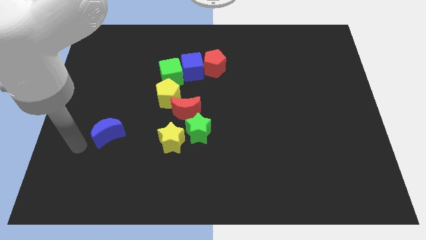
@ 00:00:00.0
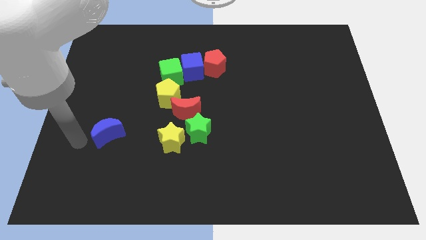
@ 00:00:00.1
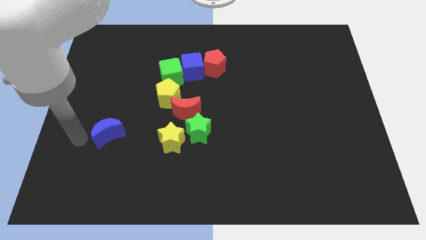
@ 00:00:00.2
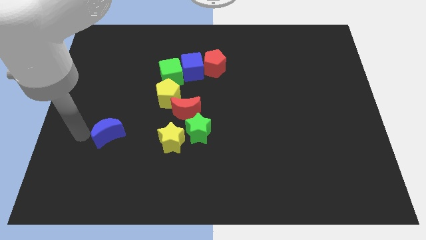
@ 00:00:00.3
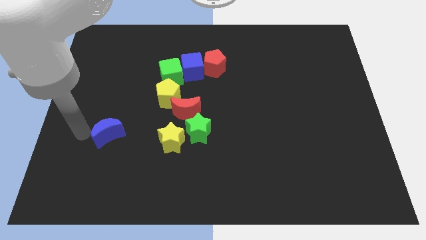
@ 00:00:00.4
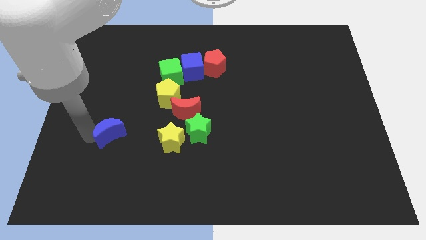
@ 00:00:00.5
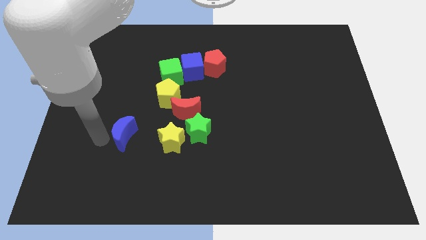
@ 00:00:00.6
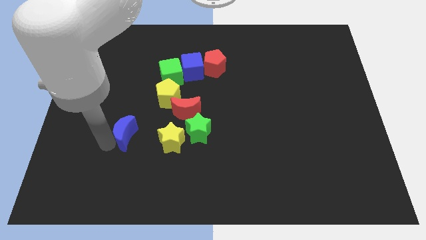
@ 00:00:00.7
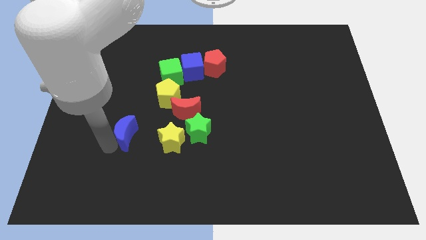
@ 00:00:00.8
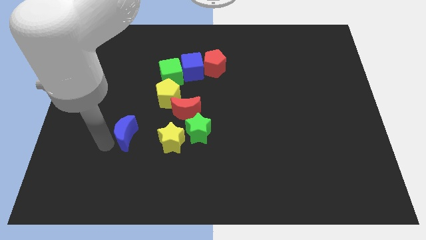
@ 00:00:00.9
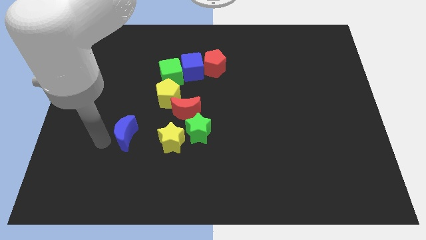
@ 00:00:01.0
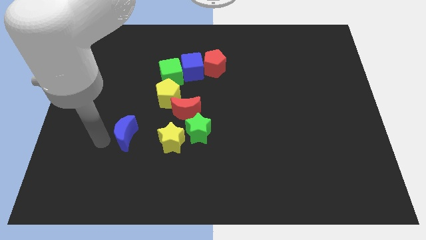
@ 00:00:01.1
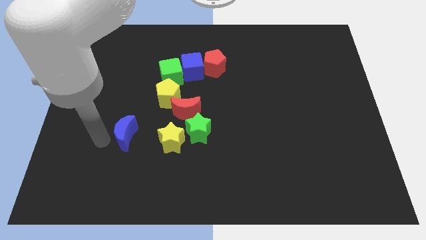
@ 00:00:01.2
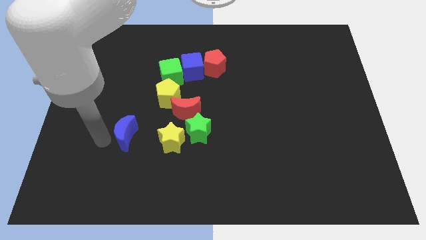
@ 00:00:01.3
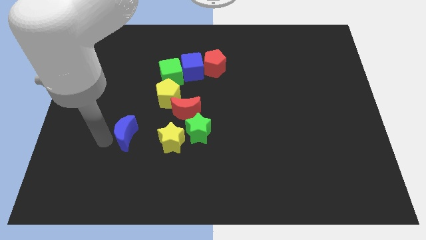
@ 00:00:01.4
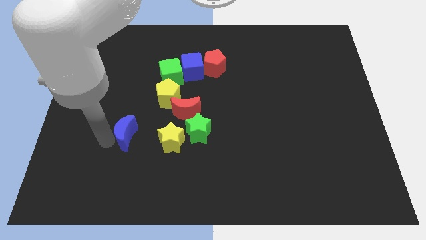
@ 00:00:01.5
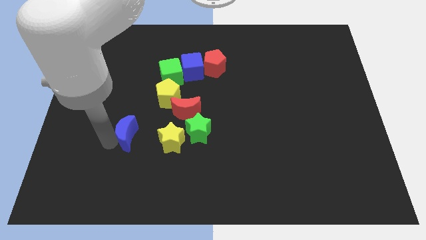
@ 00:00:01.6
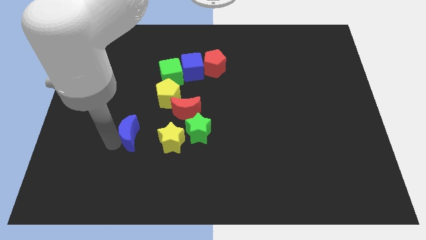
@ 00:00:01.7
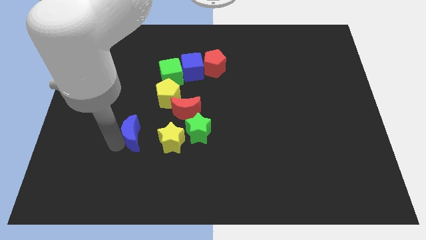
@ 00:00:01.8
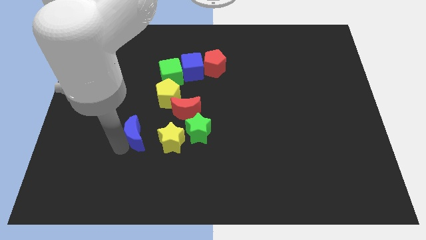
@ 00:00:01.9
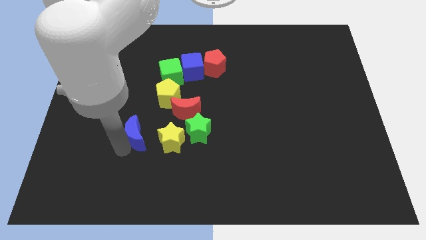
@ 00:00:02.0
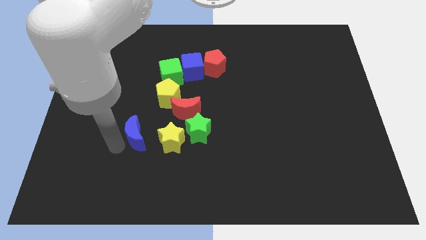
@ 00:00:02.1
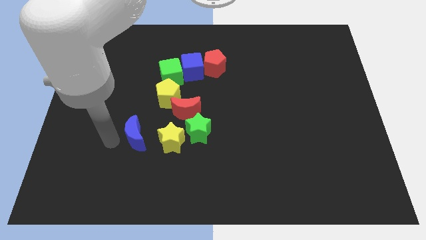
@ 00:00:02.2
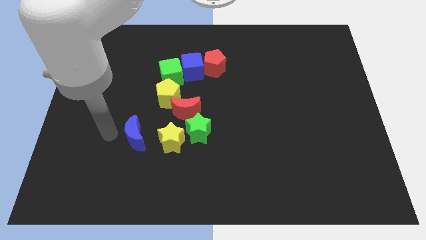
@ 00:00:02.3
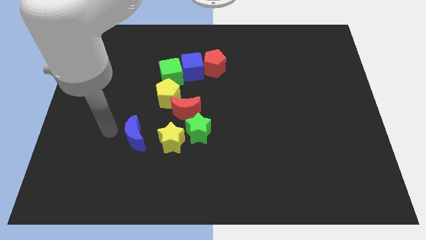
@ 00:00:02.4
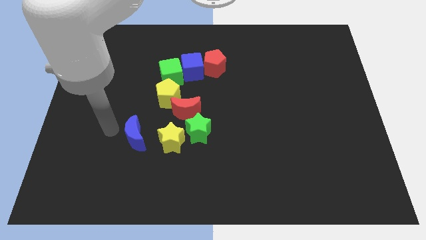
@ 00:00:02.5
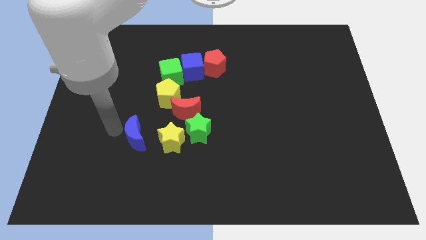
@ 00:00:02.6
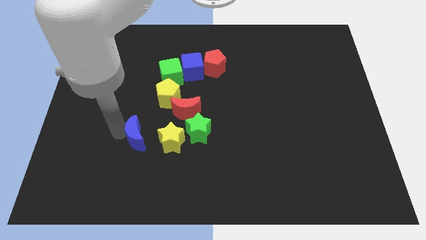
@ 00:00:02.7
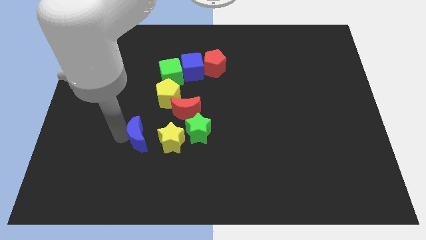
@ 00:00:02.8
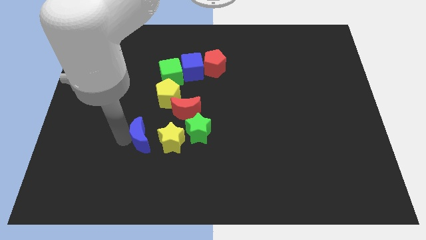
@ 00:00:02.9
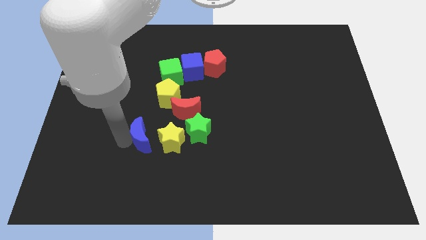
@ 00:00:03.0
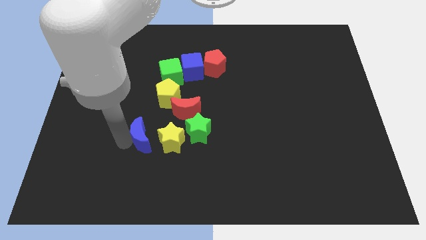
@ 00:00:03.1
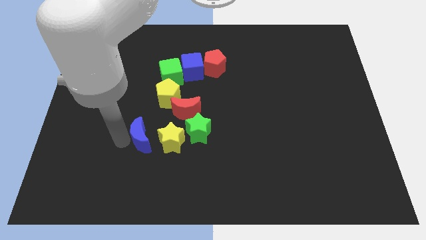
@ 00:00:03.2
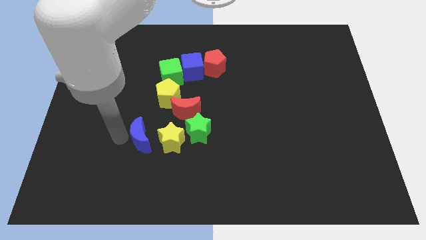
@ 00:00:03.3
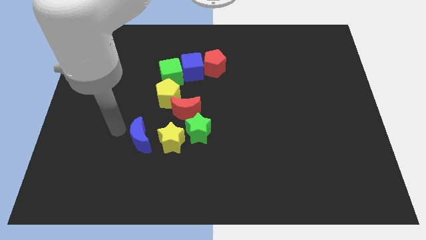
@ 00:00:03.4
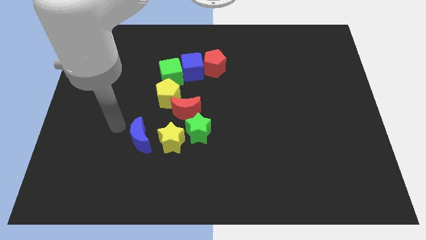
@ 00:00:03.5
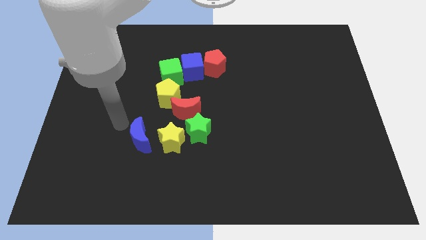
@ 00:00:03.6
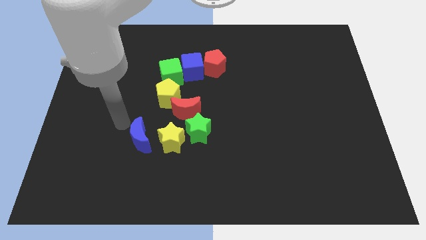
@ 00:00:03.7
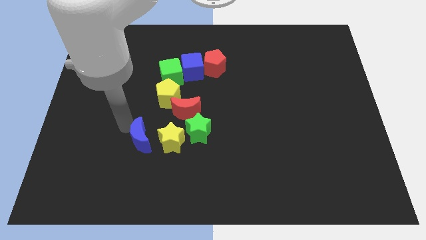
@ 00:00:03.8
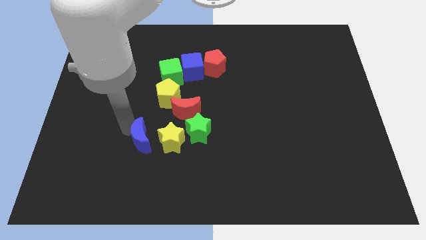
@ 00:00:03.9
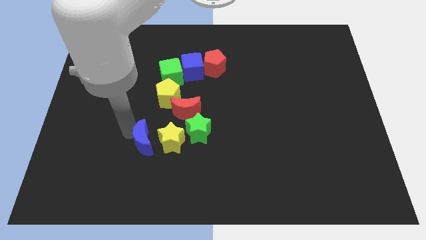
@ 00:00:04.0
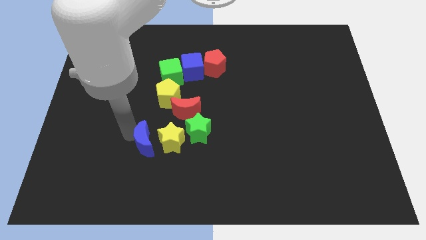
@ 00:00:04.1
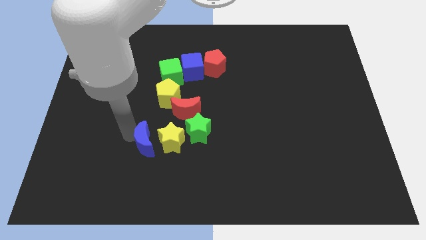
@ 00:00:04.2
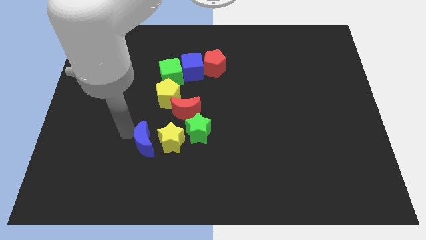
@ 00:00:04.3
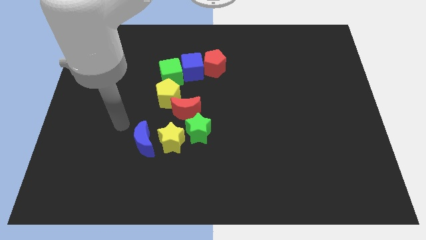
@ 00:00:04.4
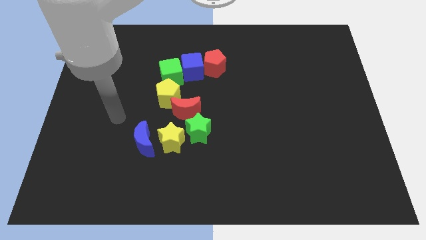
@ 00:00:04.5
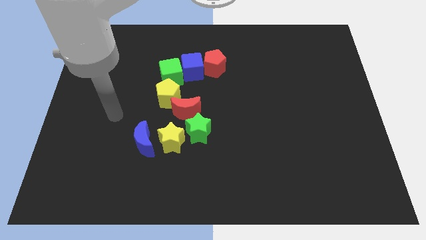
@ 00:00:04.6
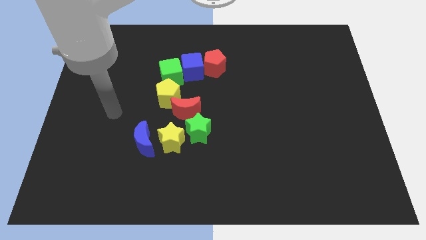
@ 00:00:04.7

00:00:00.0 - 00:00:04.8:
drag the blue crescent to the left side of the yellow star

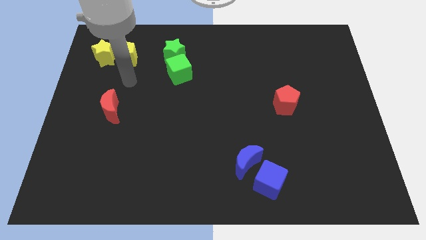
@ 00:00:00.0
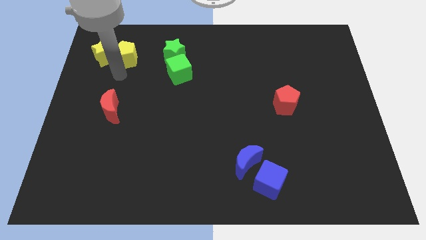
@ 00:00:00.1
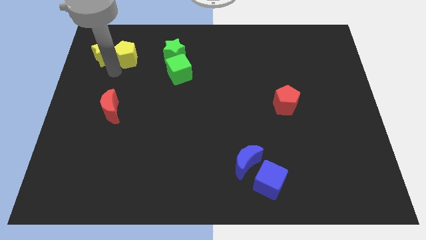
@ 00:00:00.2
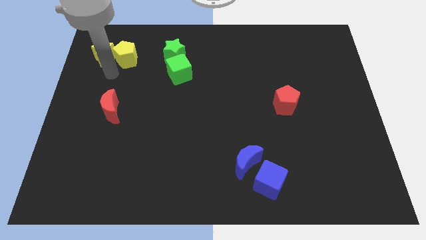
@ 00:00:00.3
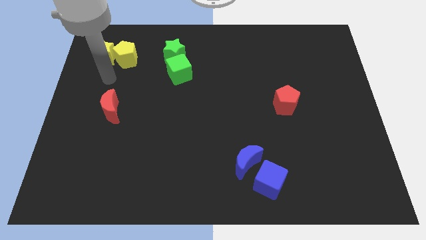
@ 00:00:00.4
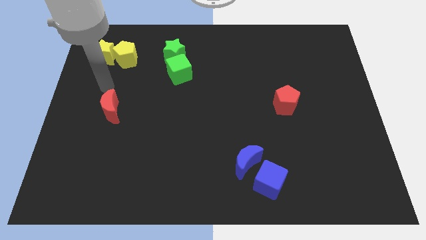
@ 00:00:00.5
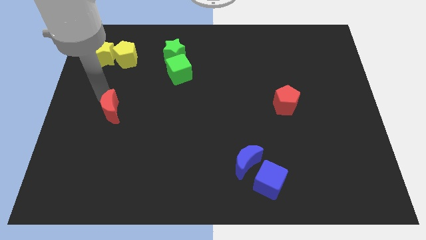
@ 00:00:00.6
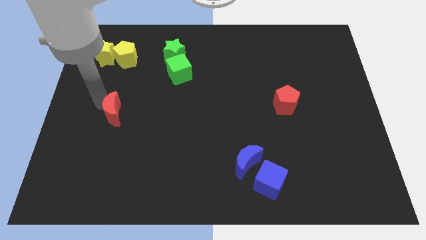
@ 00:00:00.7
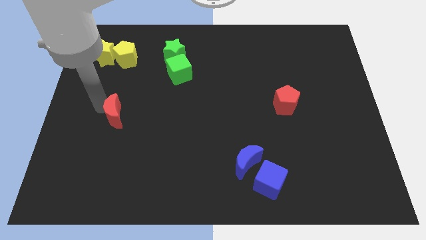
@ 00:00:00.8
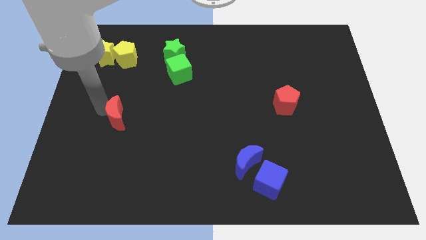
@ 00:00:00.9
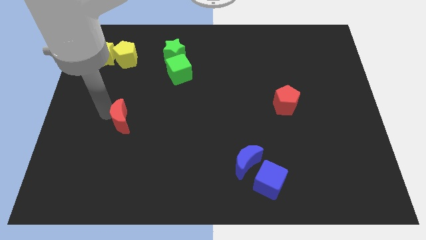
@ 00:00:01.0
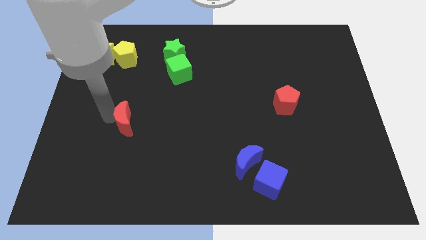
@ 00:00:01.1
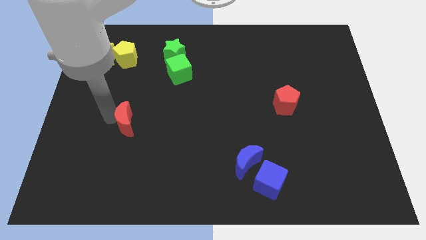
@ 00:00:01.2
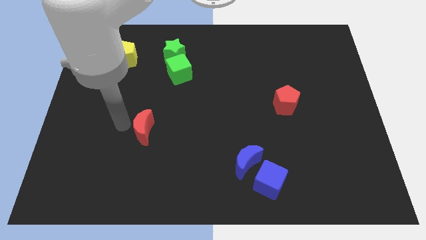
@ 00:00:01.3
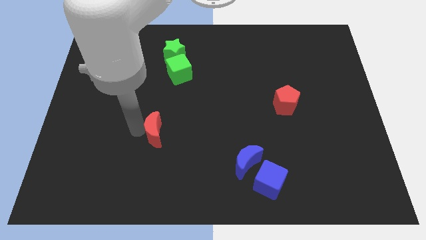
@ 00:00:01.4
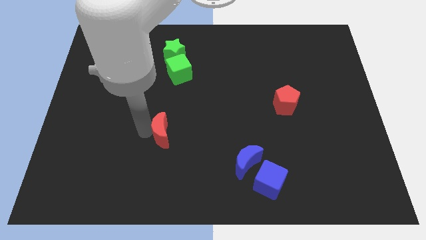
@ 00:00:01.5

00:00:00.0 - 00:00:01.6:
slide the red crescent towards the blue crescent

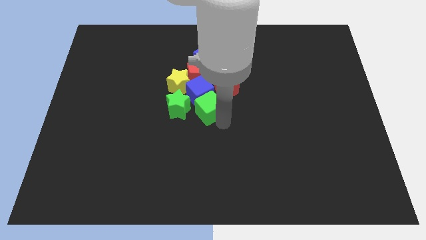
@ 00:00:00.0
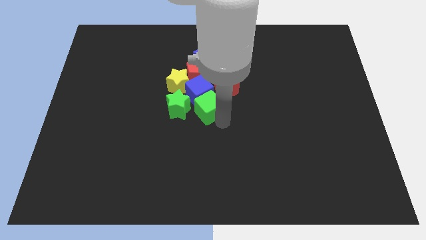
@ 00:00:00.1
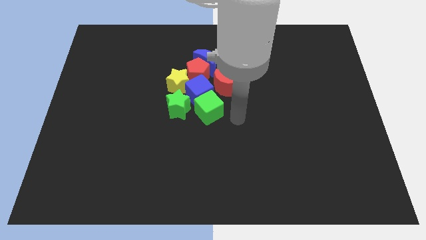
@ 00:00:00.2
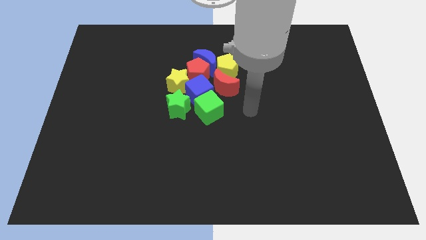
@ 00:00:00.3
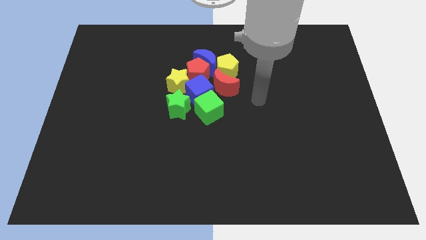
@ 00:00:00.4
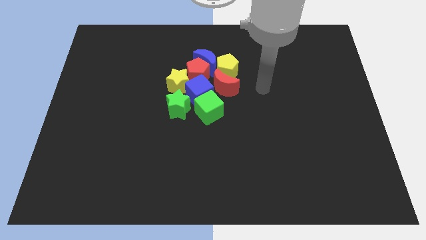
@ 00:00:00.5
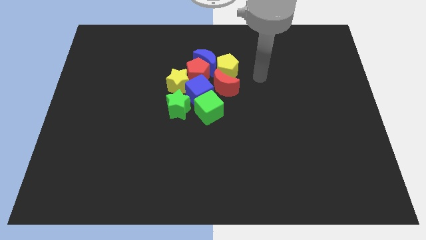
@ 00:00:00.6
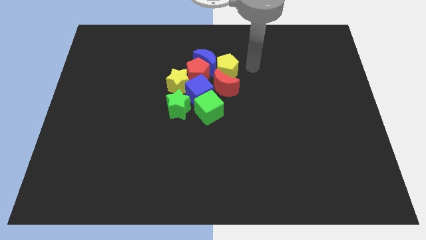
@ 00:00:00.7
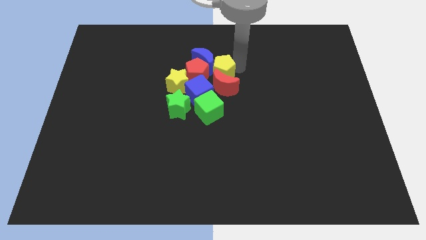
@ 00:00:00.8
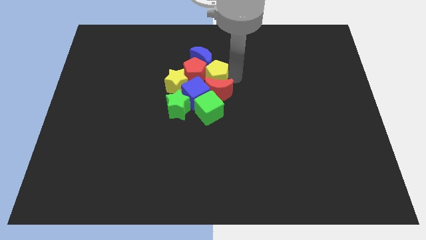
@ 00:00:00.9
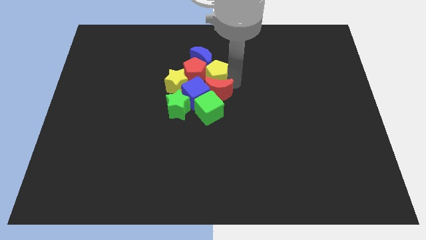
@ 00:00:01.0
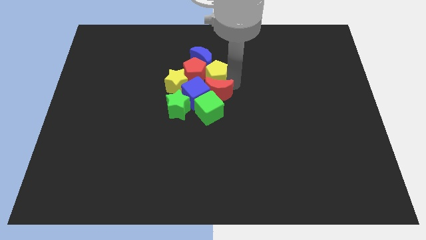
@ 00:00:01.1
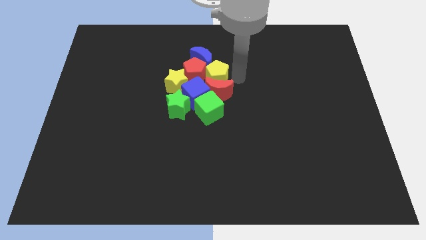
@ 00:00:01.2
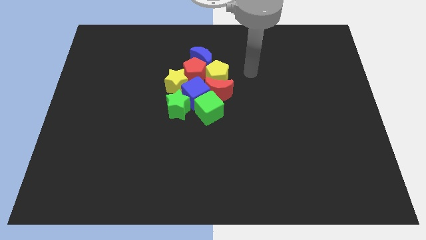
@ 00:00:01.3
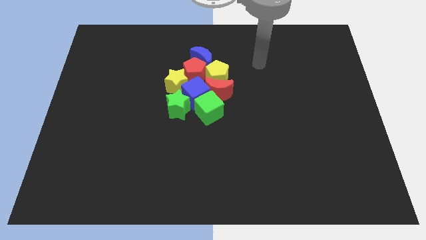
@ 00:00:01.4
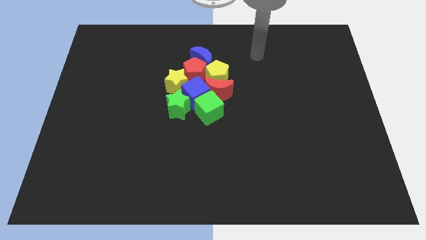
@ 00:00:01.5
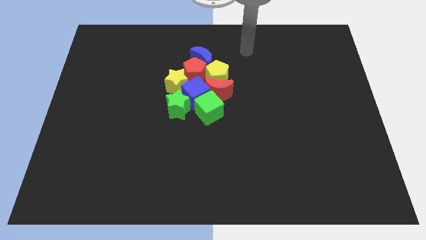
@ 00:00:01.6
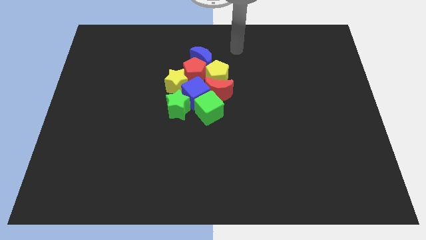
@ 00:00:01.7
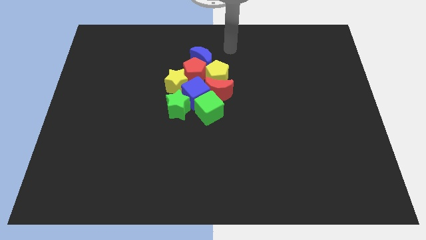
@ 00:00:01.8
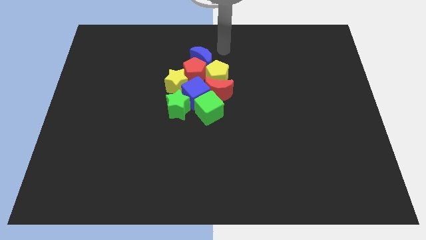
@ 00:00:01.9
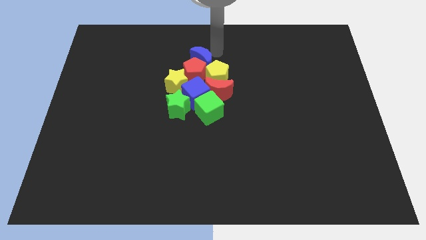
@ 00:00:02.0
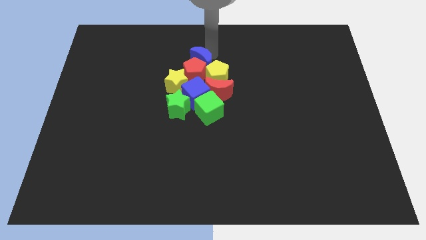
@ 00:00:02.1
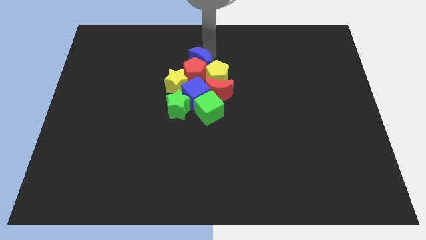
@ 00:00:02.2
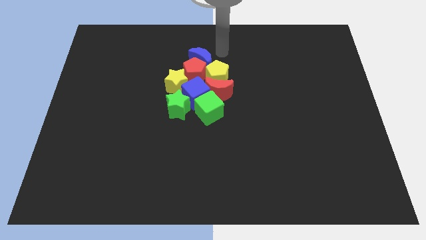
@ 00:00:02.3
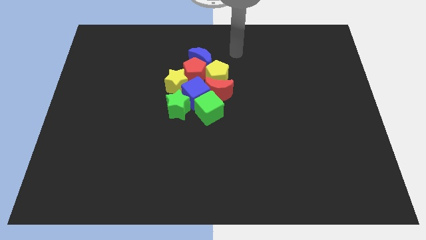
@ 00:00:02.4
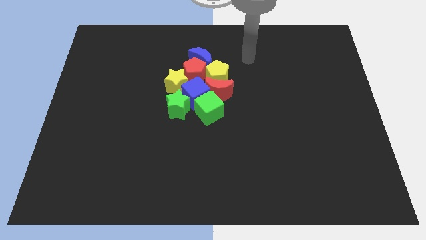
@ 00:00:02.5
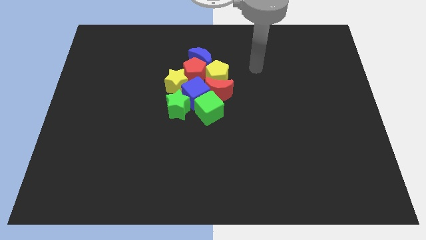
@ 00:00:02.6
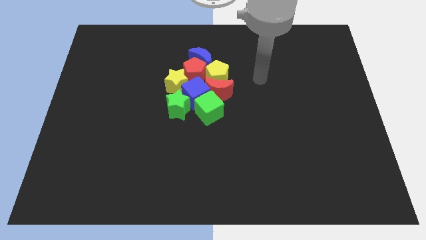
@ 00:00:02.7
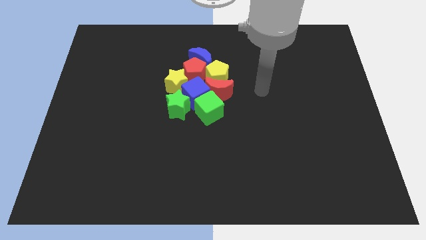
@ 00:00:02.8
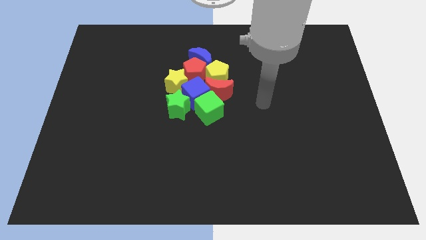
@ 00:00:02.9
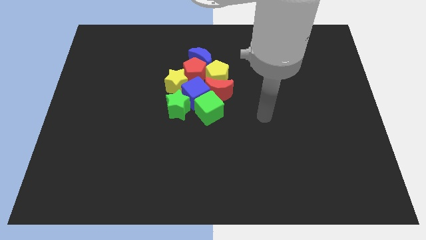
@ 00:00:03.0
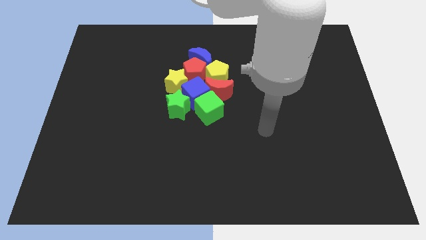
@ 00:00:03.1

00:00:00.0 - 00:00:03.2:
push yellow pentagon and blue crescent into the group of other blocks
